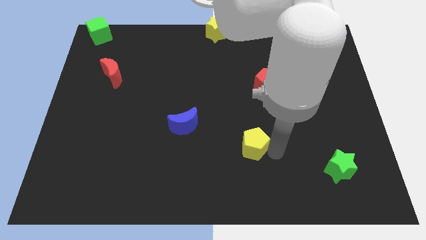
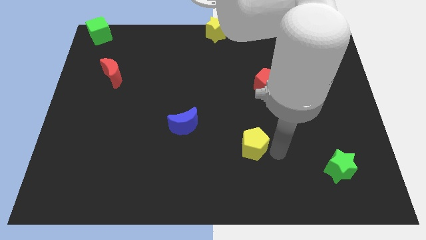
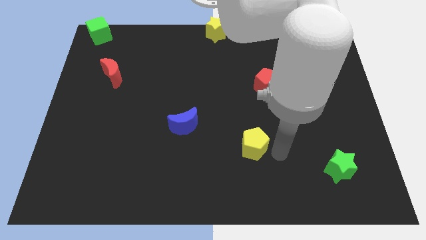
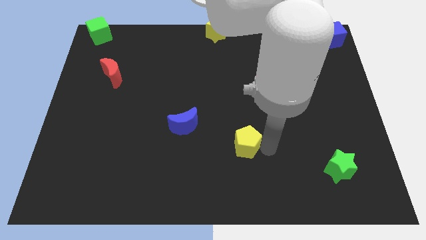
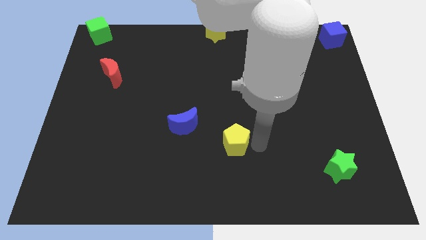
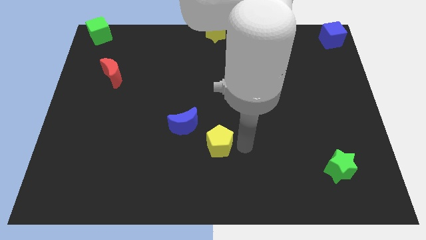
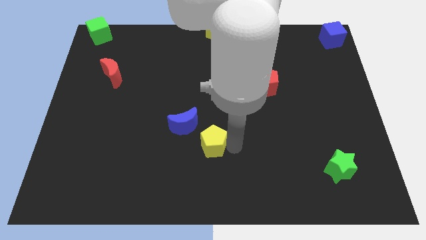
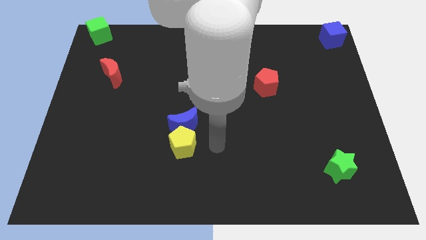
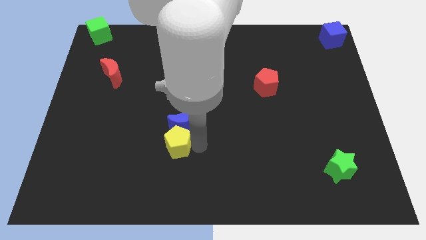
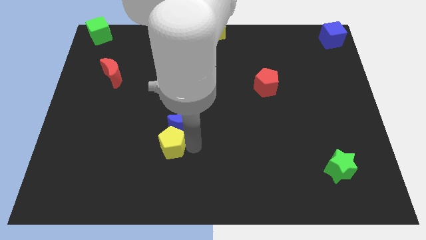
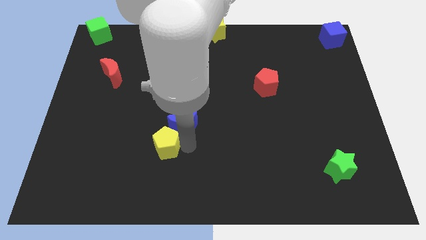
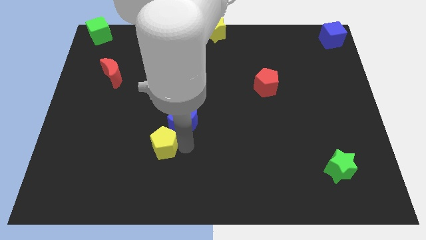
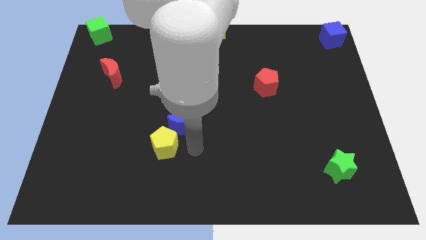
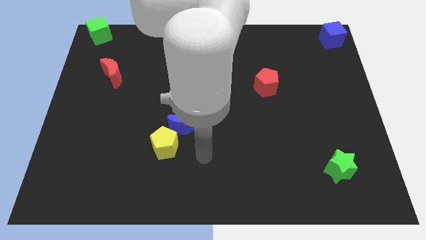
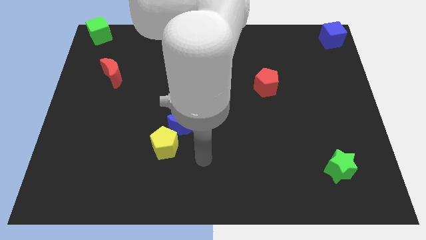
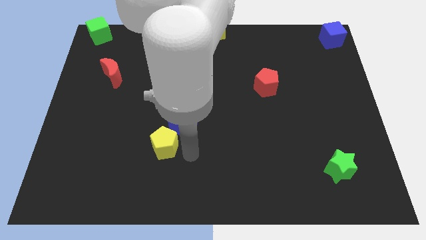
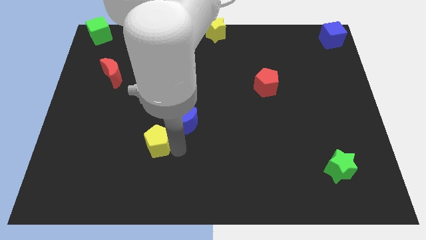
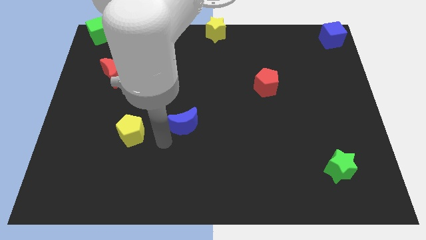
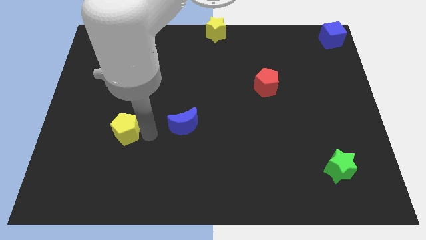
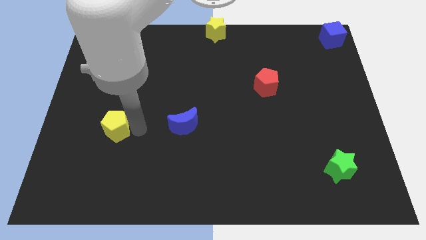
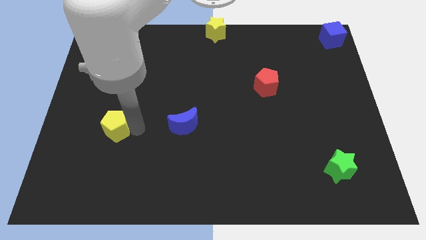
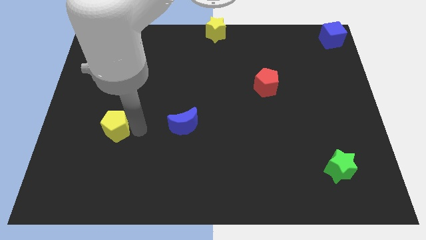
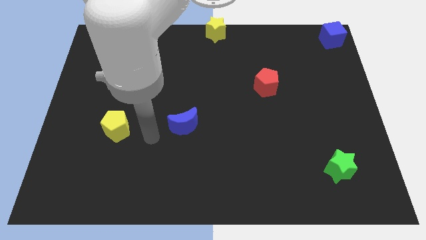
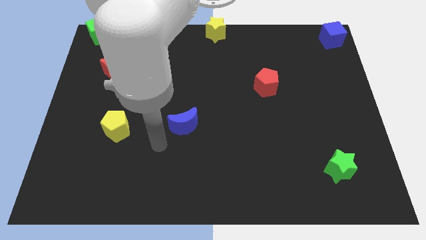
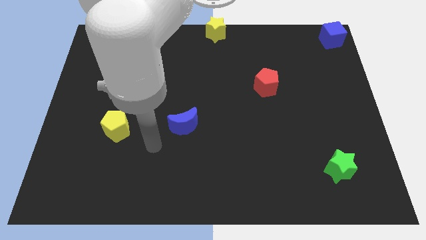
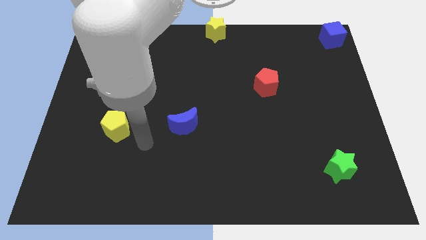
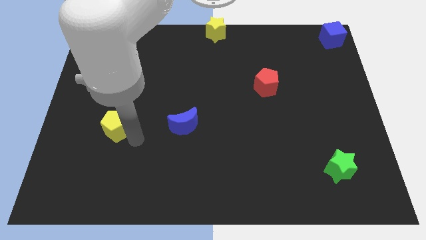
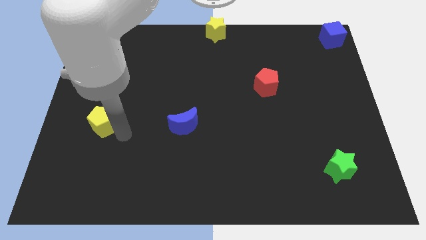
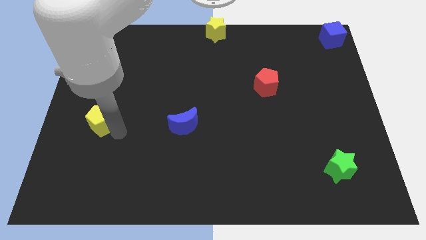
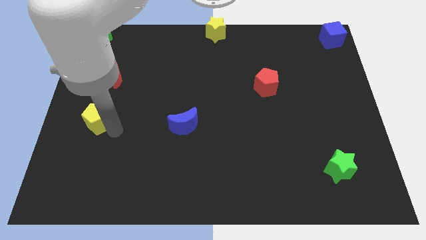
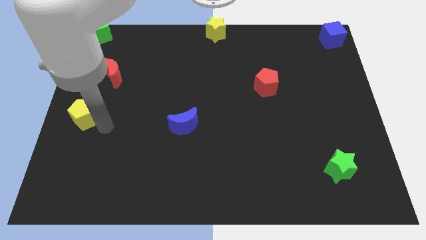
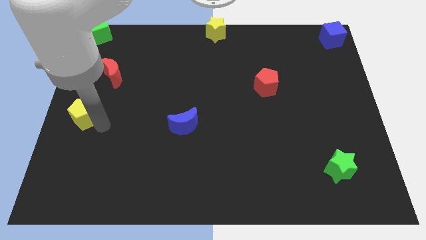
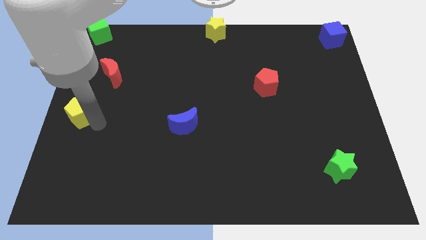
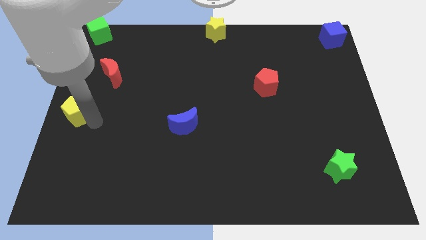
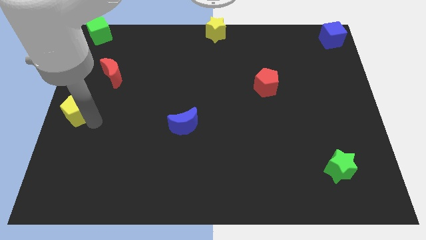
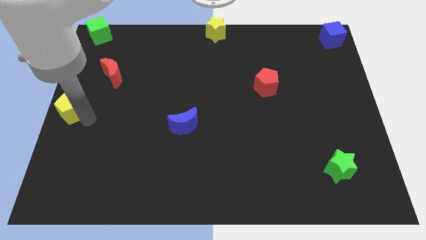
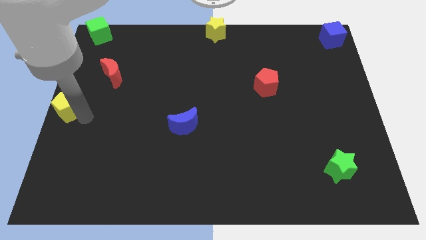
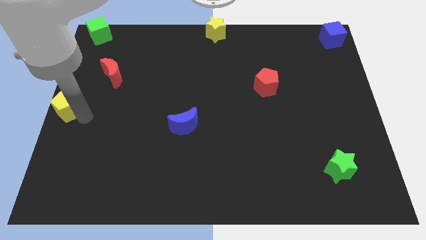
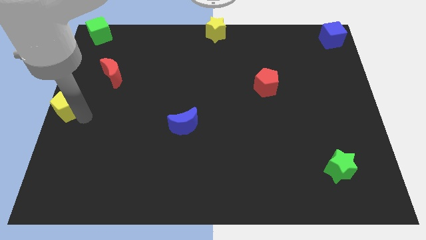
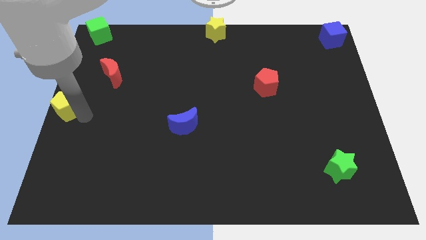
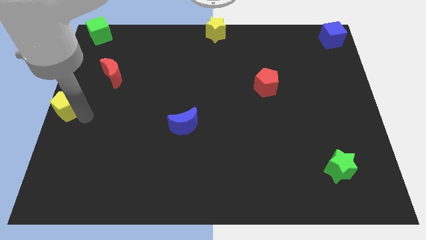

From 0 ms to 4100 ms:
place yellow pentagon to the left center of the board

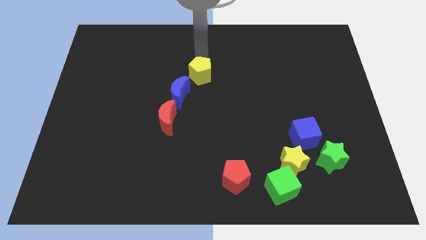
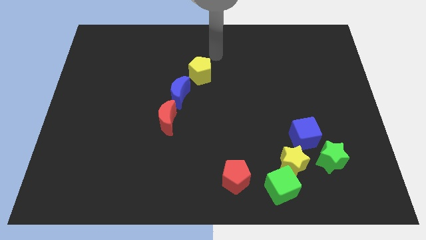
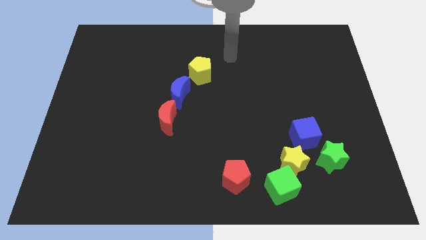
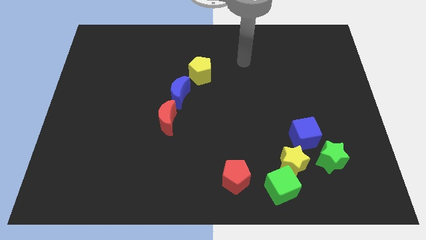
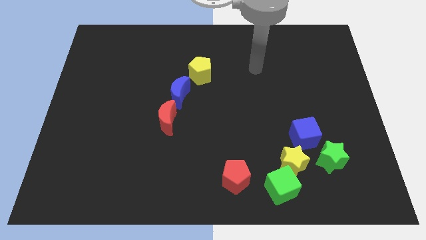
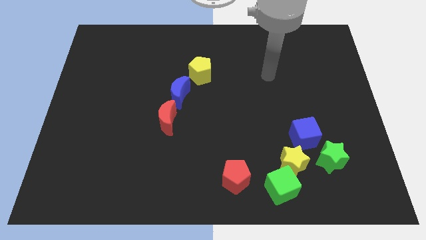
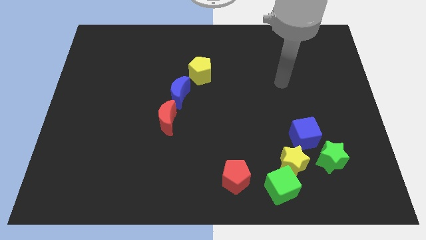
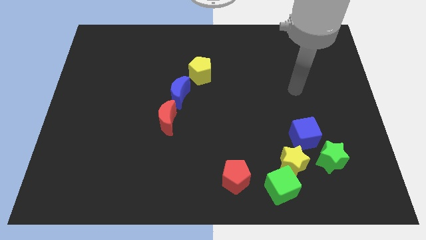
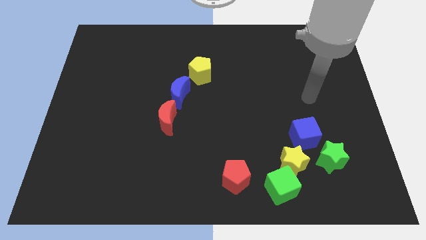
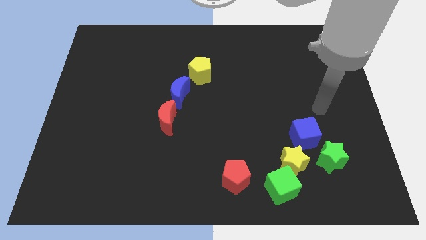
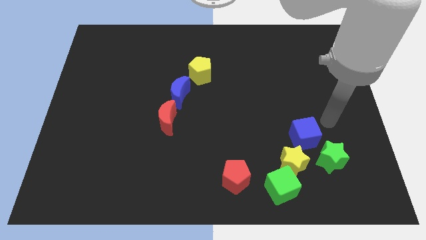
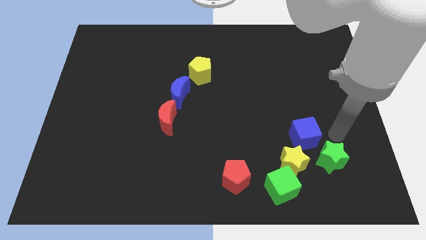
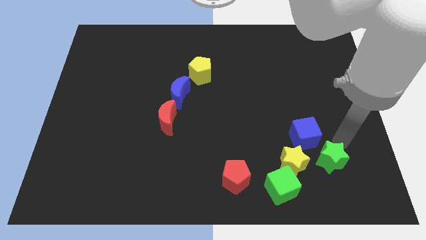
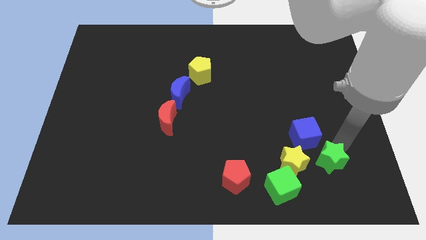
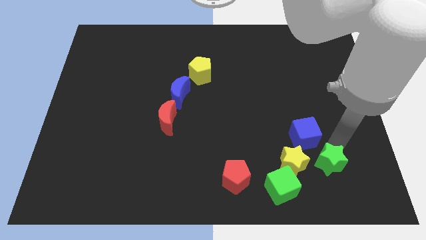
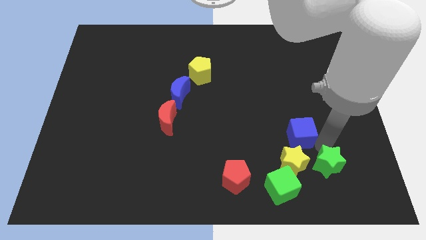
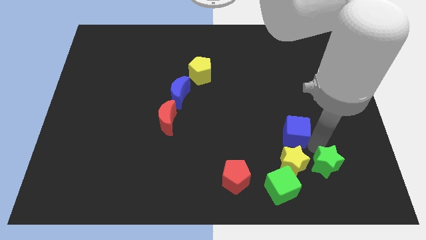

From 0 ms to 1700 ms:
go near the green star and blue cube

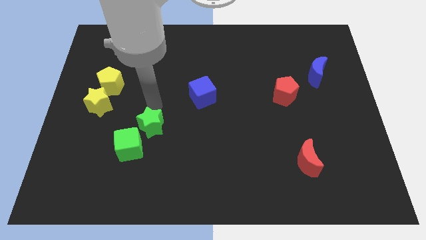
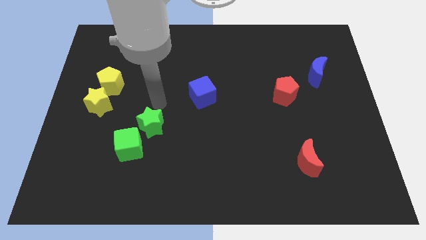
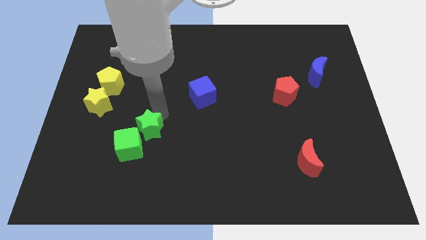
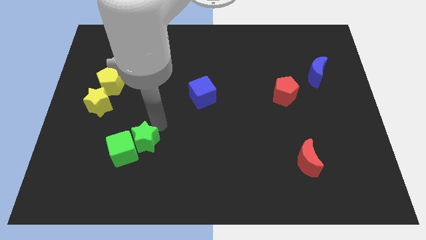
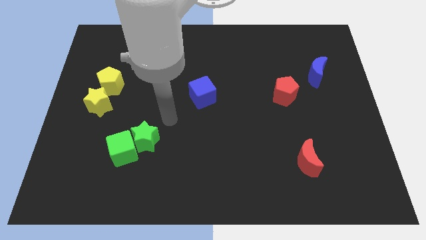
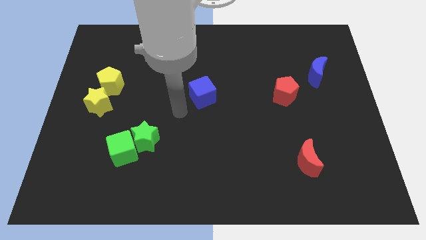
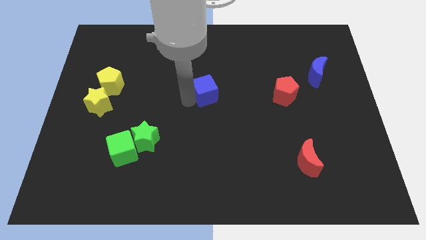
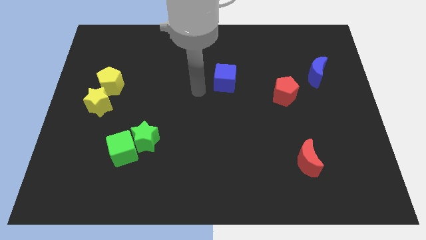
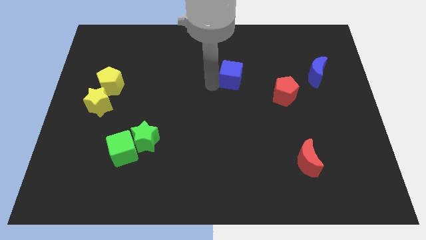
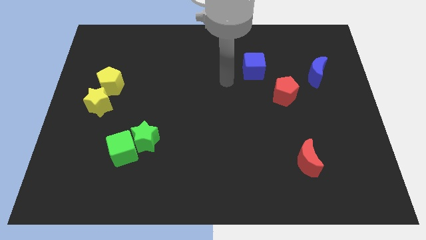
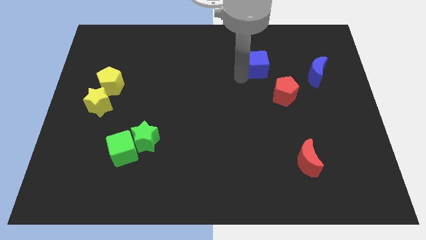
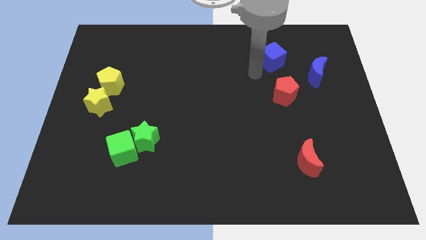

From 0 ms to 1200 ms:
place the blue cube parallel to blue moon

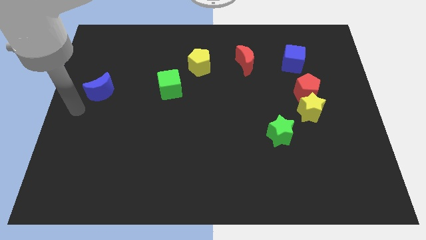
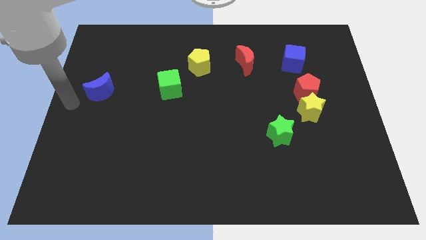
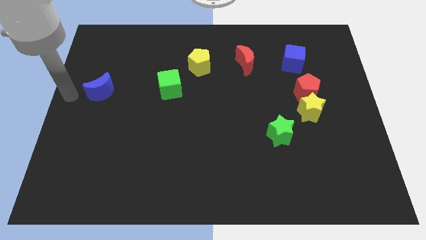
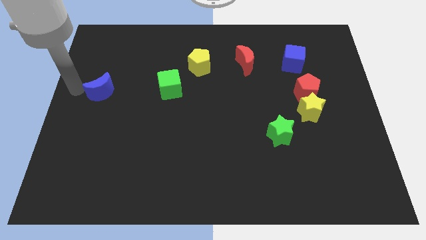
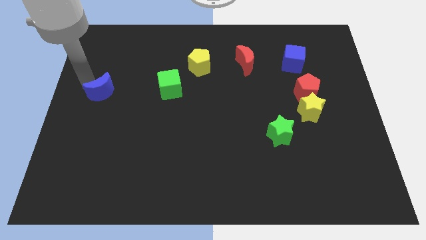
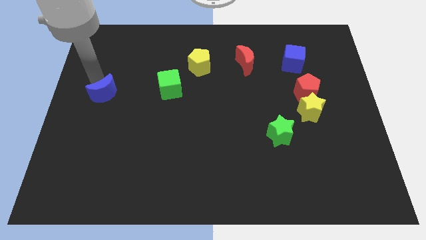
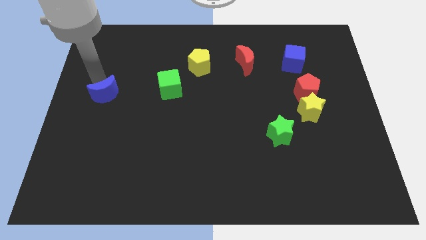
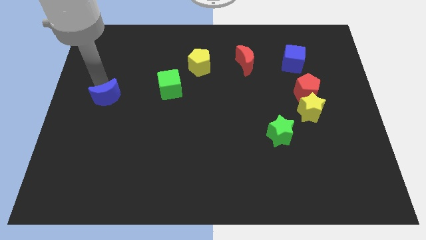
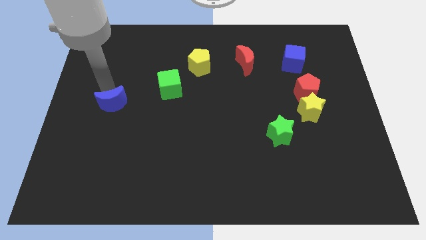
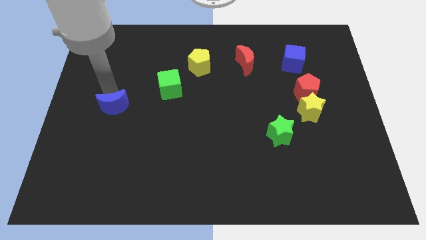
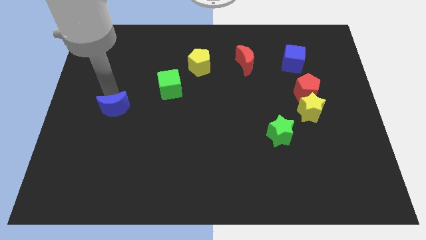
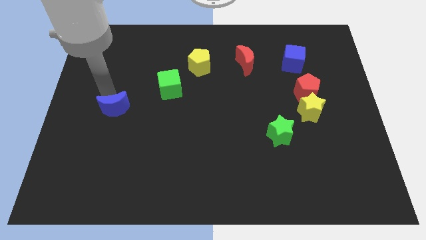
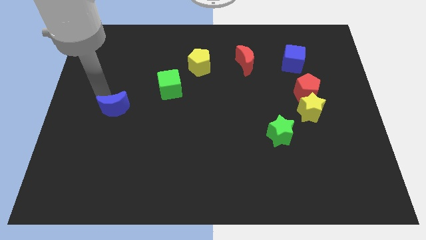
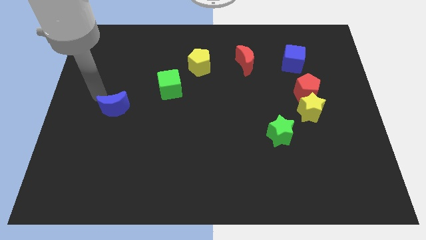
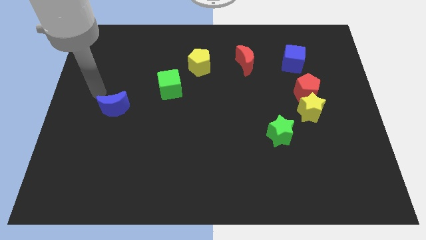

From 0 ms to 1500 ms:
slide the blue crescent down slightly

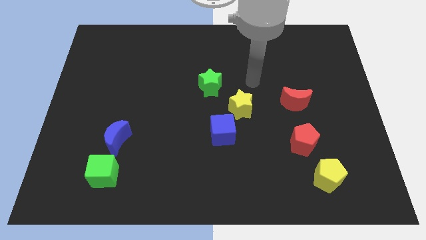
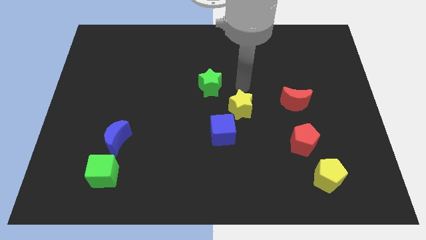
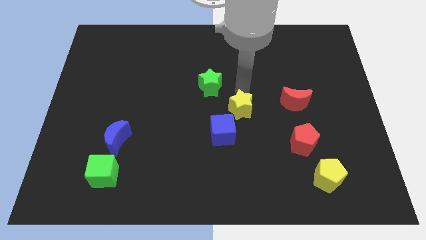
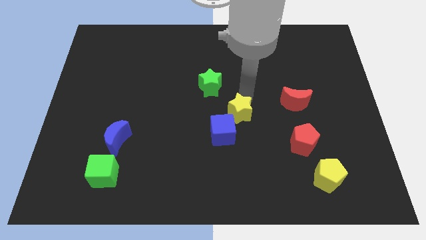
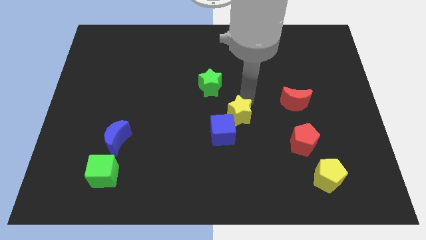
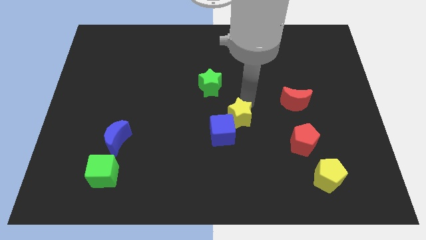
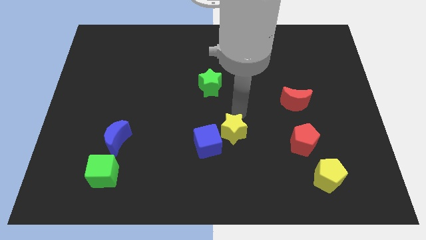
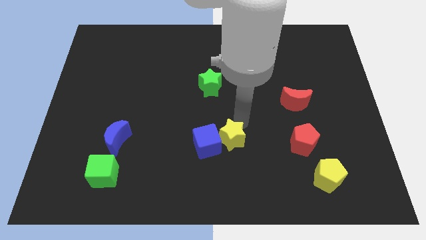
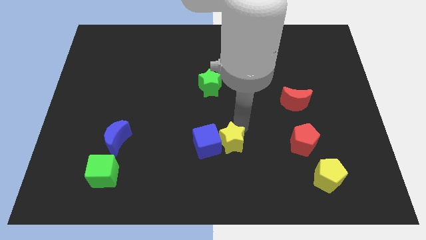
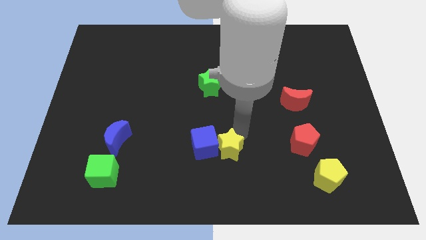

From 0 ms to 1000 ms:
push the yellow star into the blue cube
